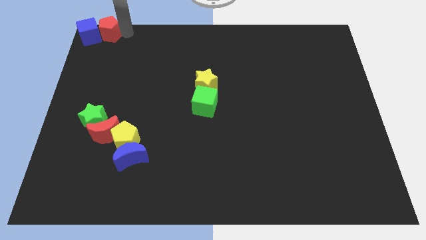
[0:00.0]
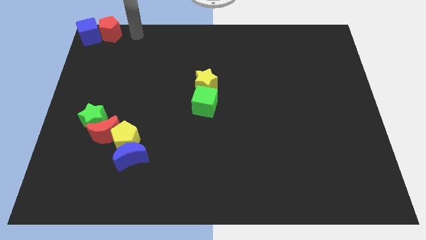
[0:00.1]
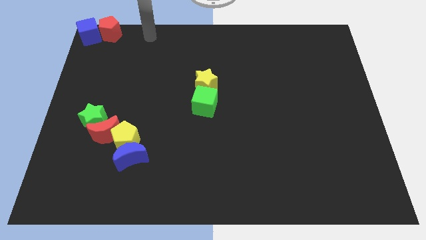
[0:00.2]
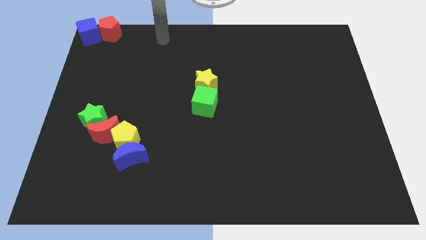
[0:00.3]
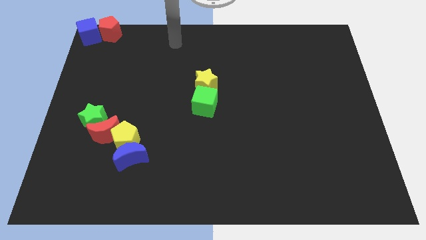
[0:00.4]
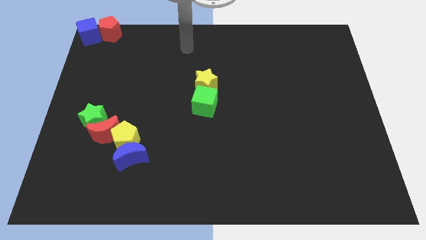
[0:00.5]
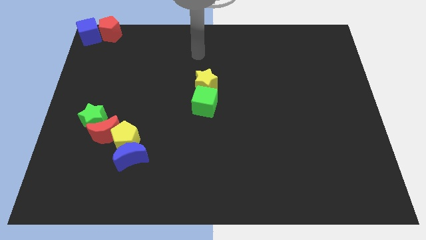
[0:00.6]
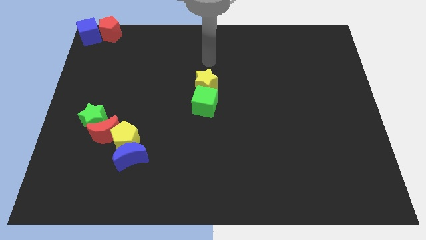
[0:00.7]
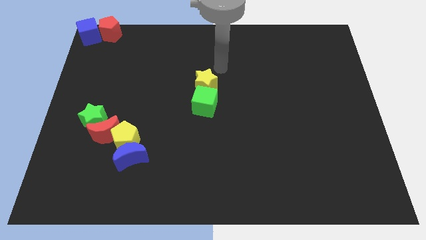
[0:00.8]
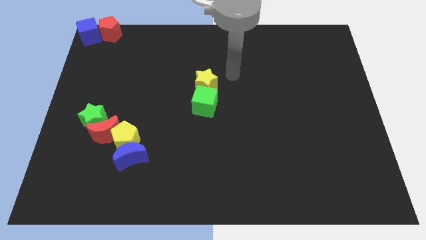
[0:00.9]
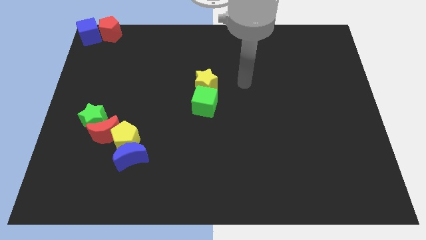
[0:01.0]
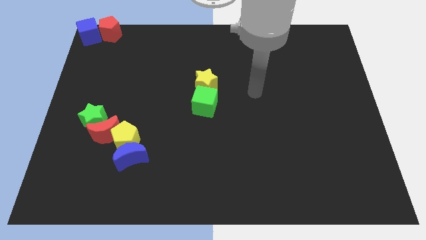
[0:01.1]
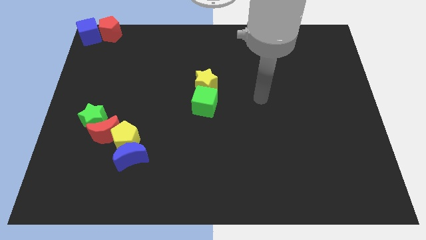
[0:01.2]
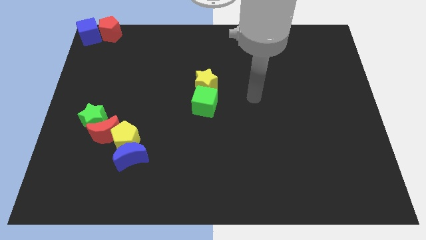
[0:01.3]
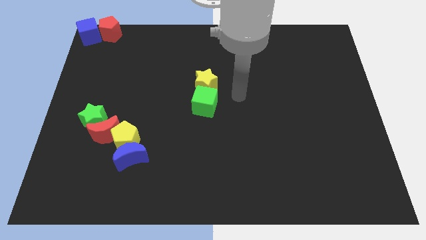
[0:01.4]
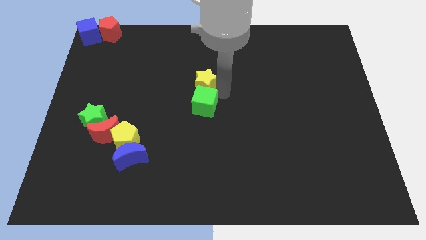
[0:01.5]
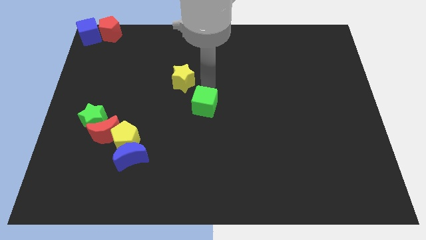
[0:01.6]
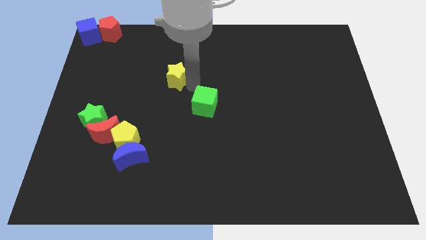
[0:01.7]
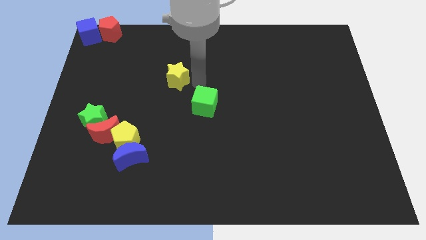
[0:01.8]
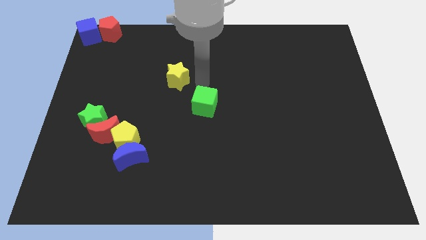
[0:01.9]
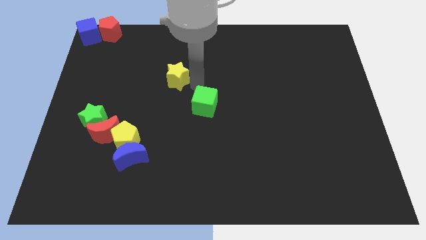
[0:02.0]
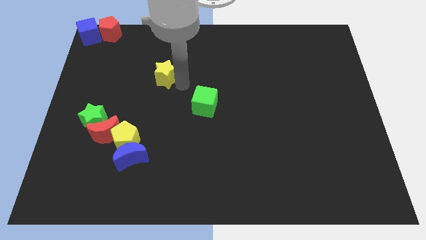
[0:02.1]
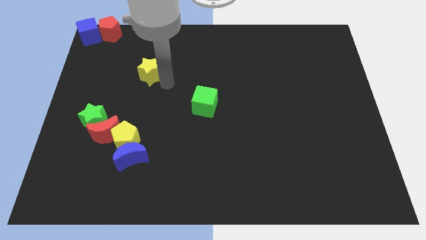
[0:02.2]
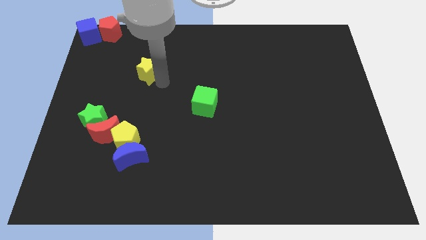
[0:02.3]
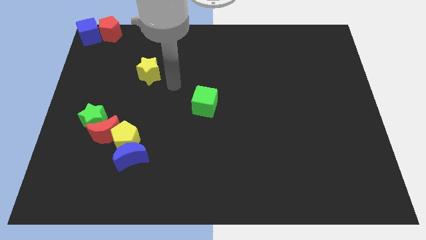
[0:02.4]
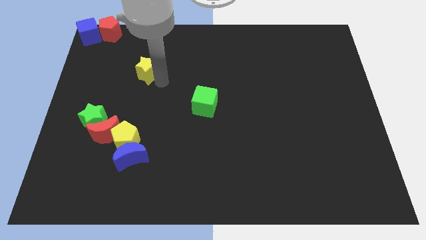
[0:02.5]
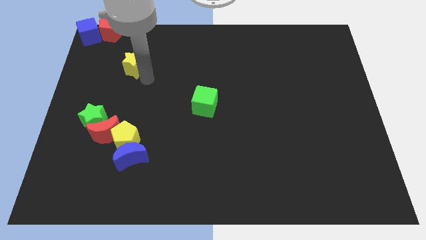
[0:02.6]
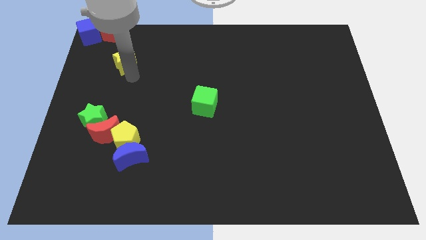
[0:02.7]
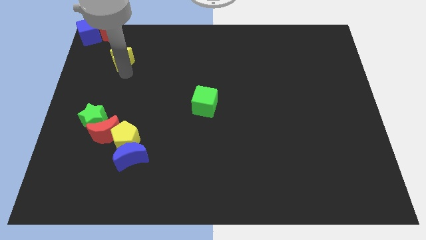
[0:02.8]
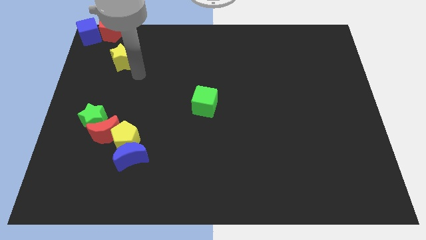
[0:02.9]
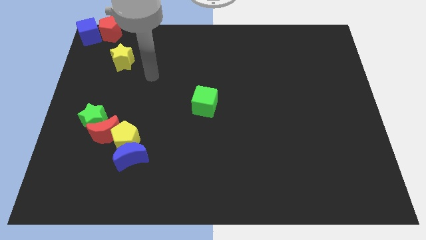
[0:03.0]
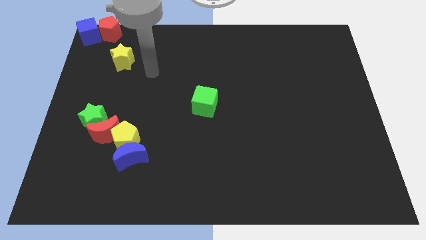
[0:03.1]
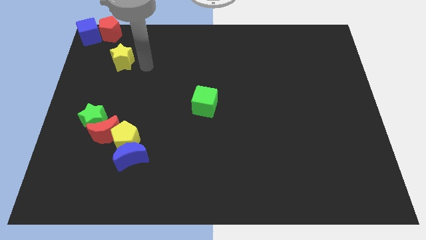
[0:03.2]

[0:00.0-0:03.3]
separate the yellow star from the green cube

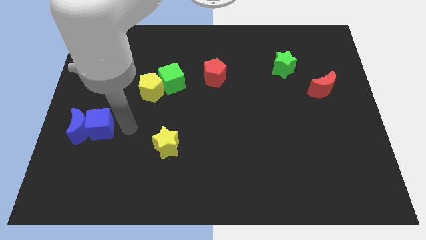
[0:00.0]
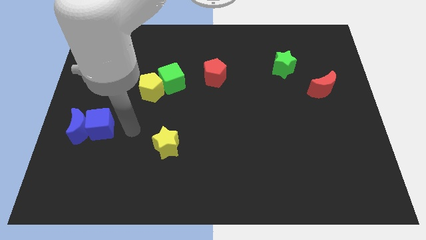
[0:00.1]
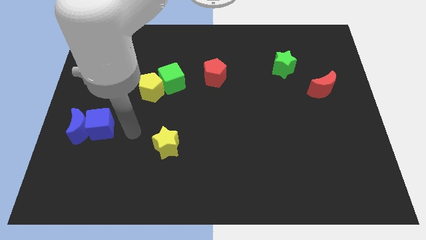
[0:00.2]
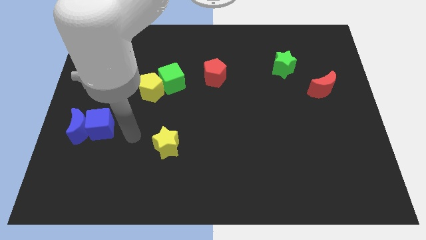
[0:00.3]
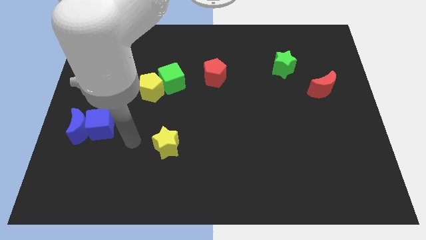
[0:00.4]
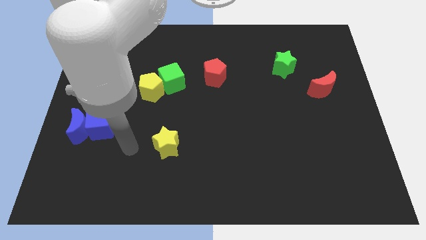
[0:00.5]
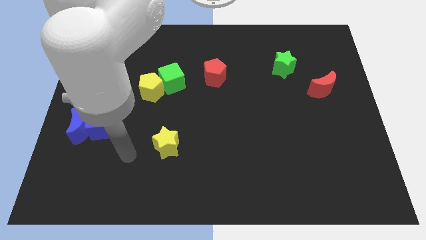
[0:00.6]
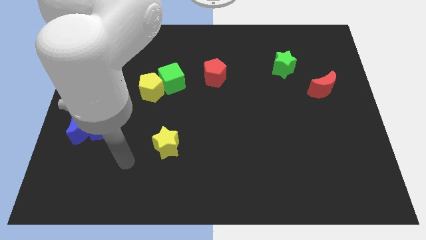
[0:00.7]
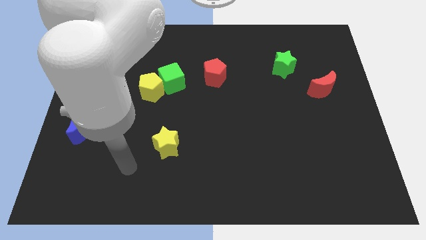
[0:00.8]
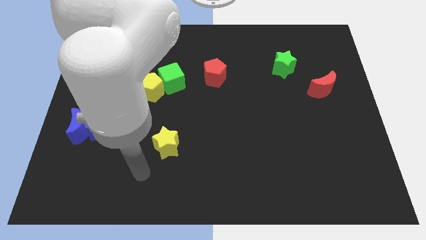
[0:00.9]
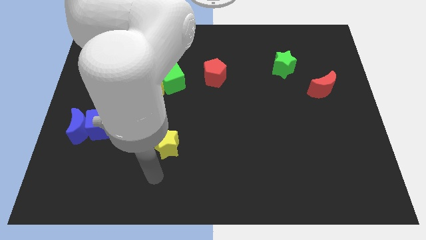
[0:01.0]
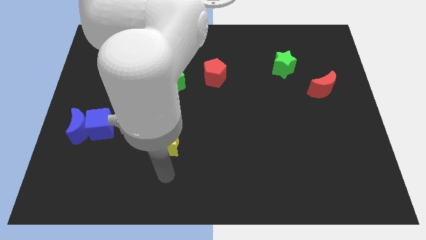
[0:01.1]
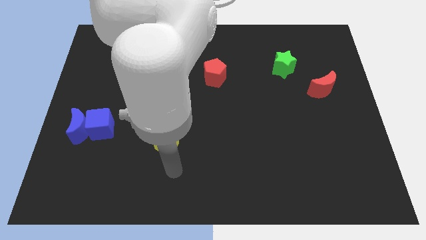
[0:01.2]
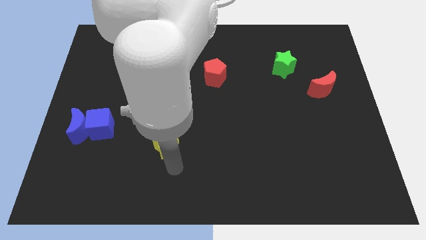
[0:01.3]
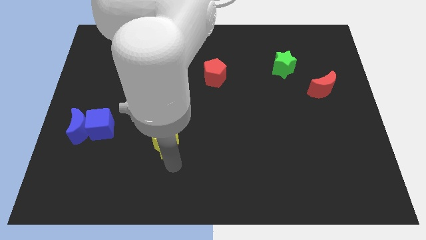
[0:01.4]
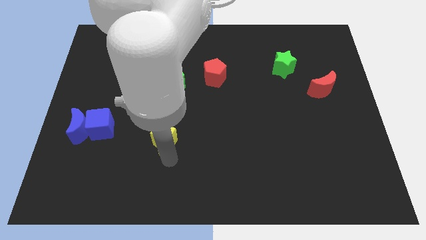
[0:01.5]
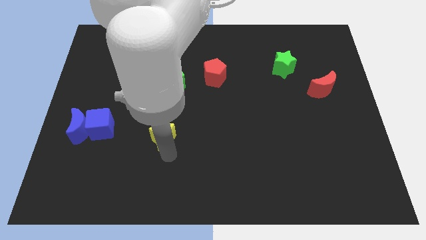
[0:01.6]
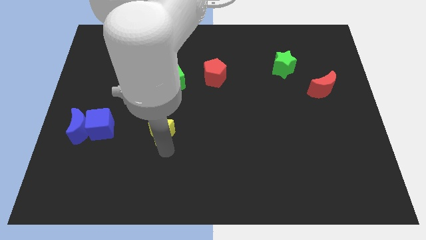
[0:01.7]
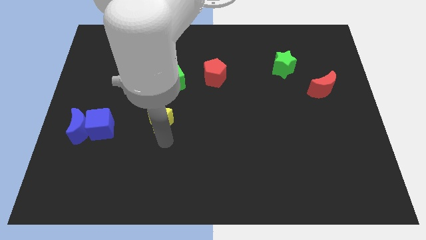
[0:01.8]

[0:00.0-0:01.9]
move yellow star slightly up

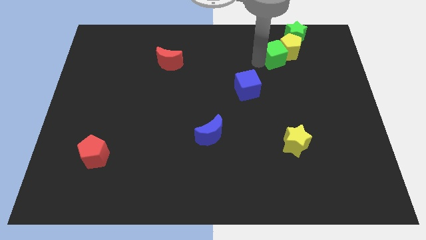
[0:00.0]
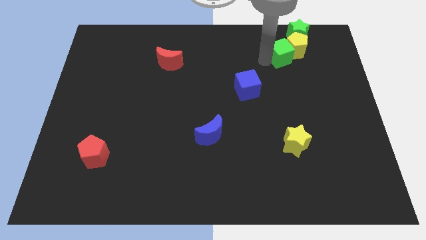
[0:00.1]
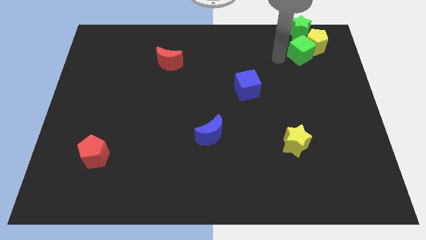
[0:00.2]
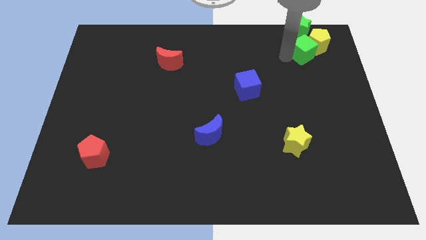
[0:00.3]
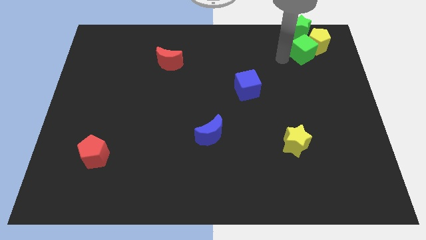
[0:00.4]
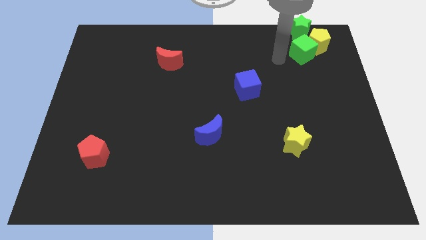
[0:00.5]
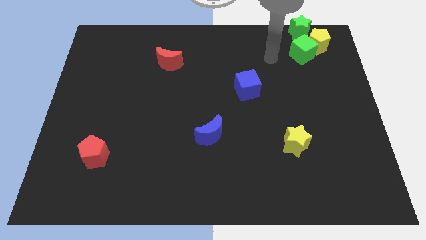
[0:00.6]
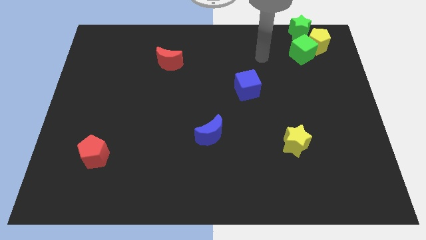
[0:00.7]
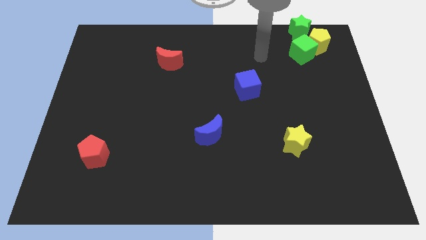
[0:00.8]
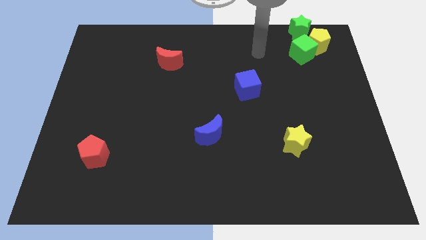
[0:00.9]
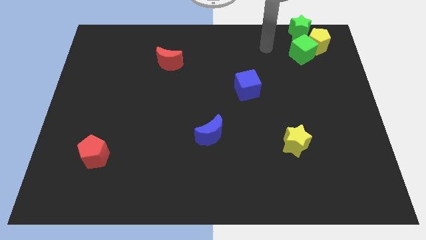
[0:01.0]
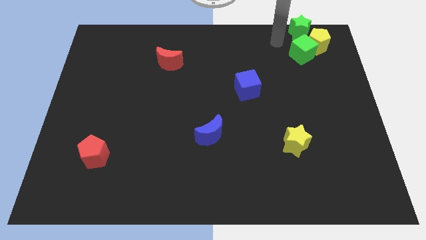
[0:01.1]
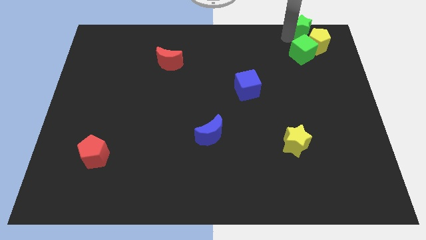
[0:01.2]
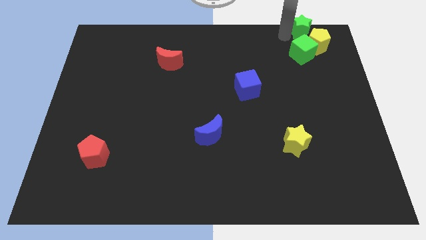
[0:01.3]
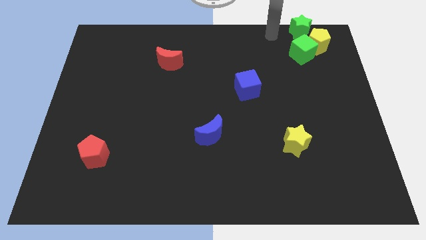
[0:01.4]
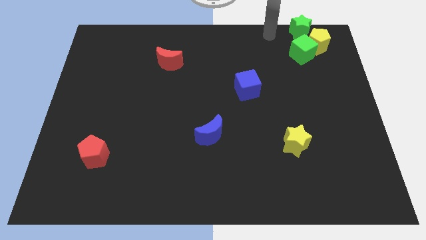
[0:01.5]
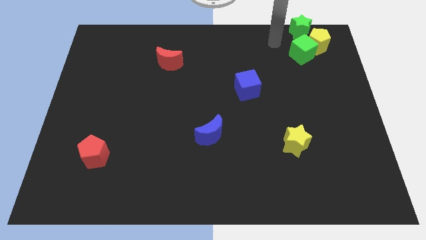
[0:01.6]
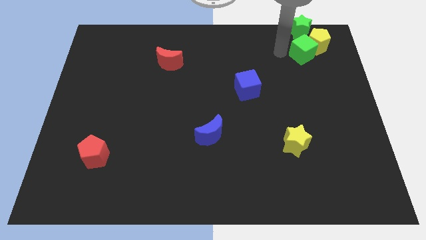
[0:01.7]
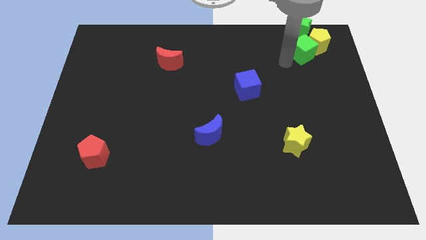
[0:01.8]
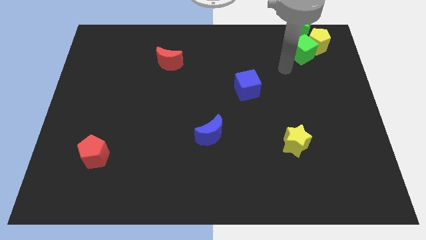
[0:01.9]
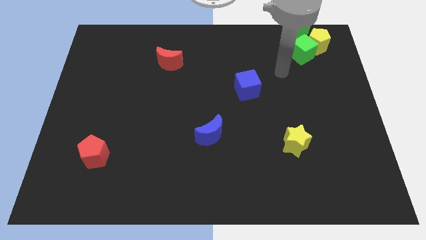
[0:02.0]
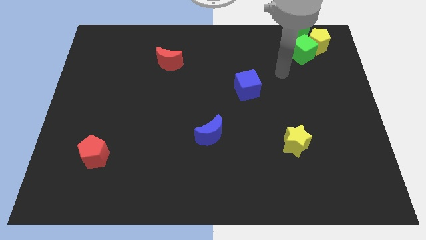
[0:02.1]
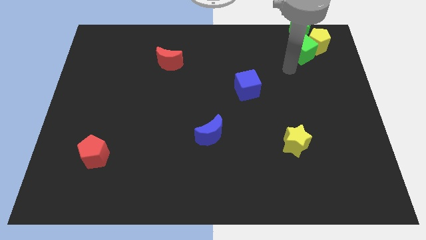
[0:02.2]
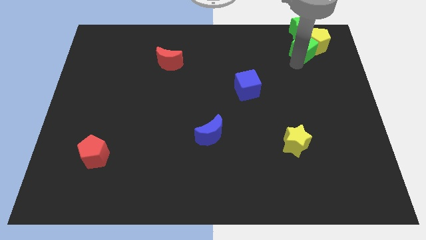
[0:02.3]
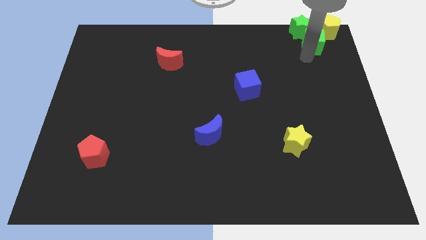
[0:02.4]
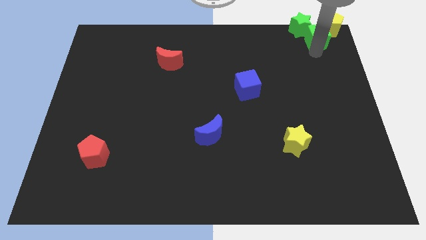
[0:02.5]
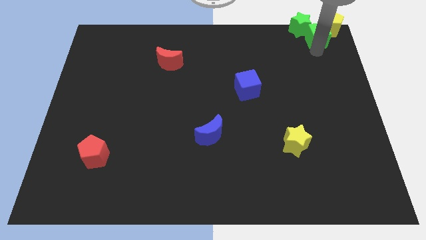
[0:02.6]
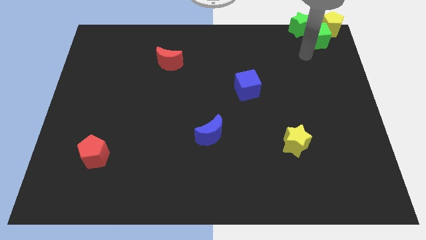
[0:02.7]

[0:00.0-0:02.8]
push the green cube into the yellow pentagon

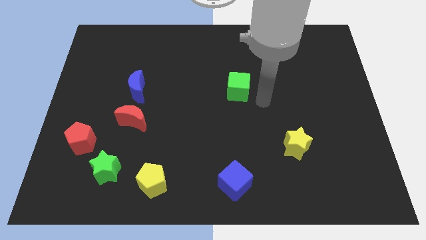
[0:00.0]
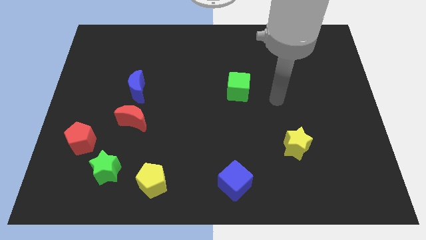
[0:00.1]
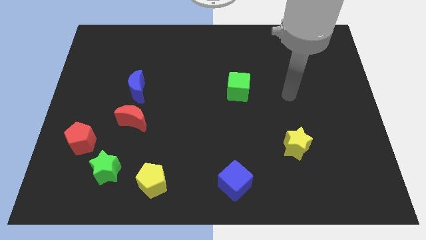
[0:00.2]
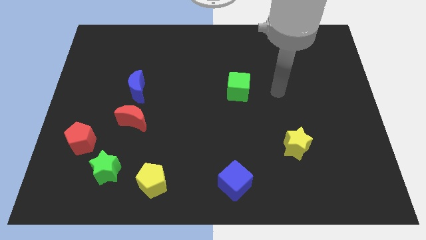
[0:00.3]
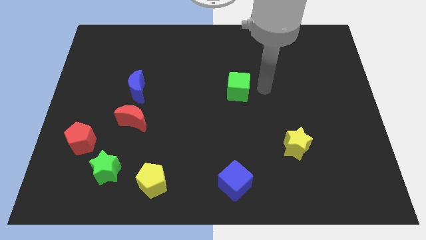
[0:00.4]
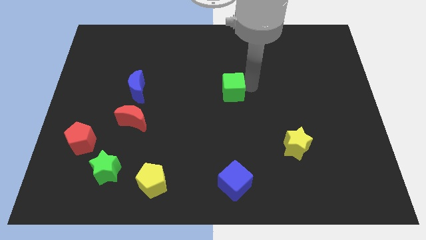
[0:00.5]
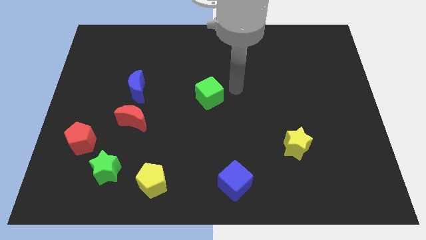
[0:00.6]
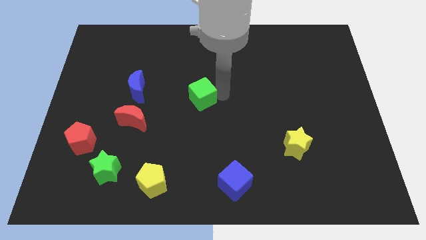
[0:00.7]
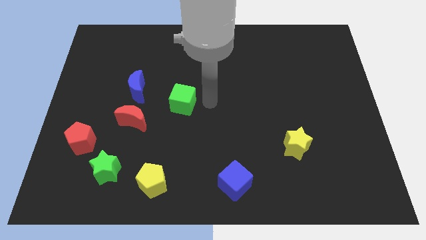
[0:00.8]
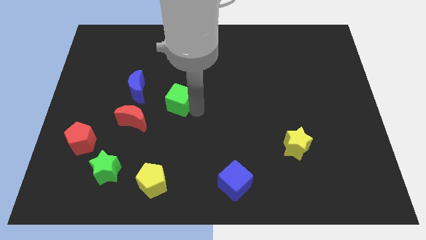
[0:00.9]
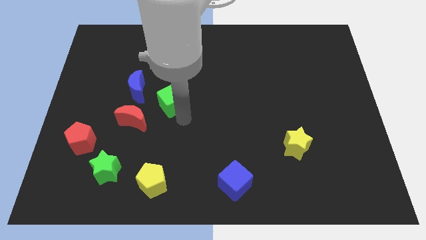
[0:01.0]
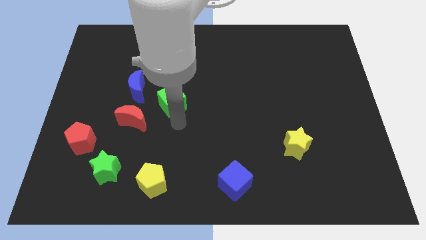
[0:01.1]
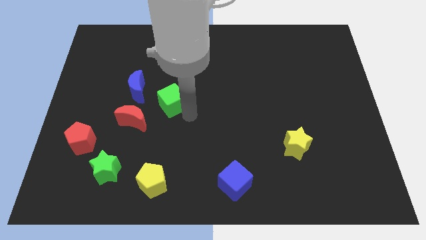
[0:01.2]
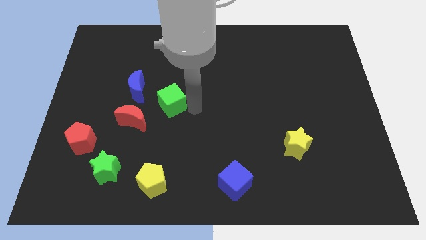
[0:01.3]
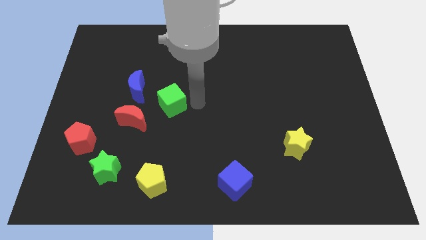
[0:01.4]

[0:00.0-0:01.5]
place the green cube diagonally right to the red moon
